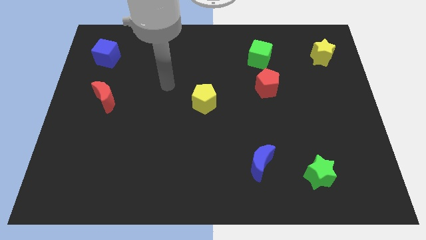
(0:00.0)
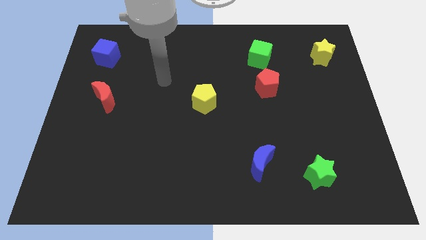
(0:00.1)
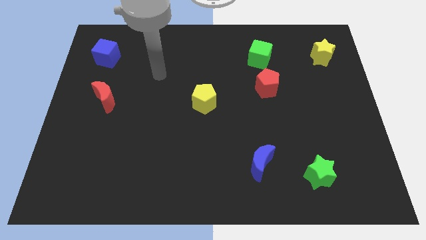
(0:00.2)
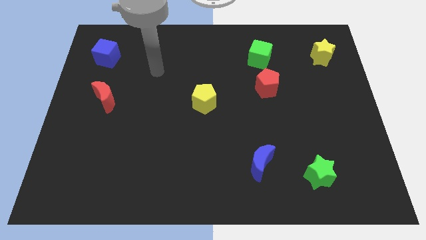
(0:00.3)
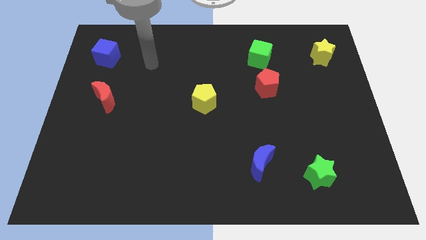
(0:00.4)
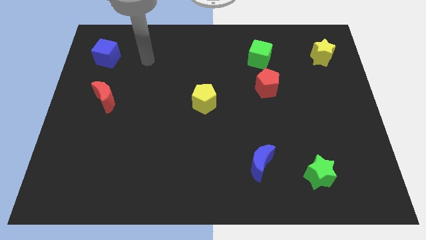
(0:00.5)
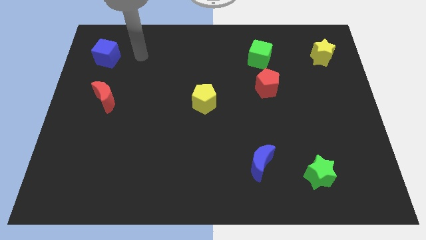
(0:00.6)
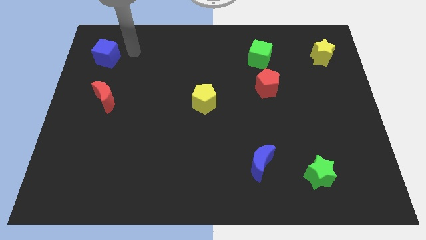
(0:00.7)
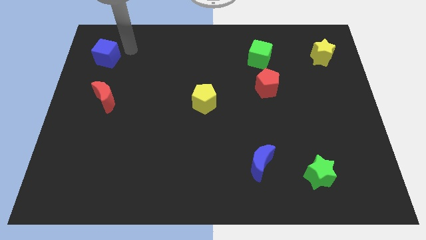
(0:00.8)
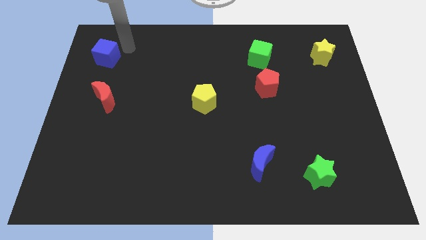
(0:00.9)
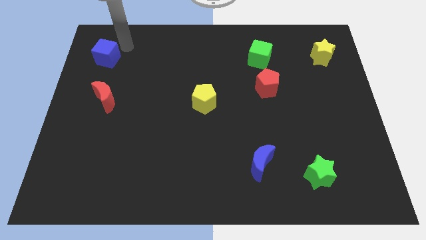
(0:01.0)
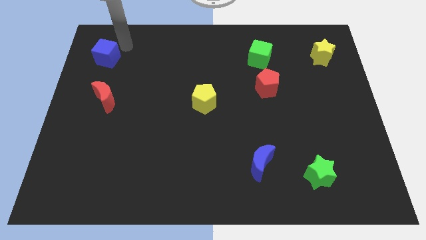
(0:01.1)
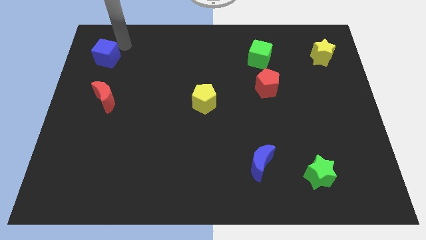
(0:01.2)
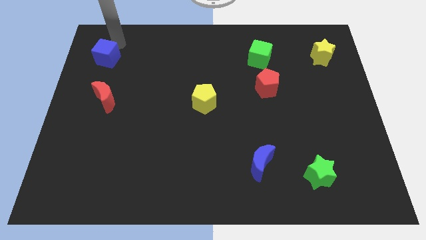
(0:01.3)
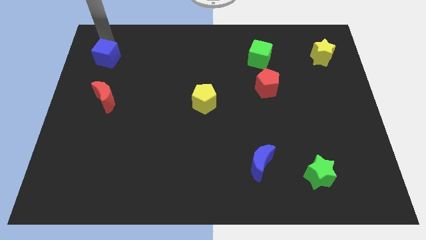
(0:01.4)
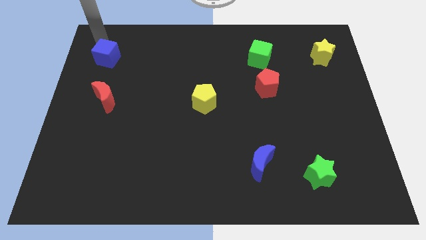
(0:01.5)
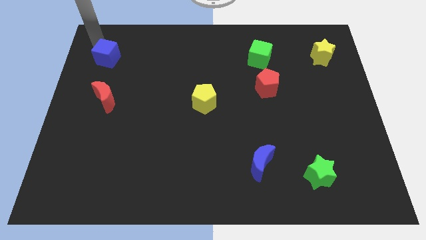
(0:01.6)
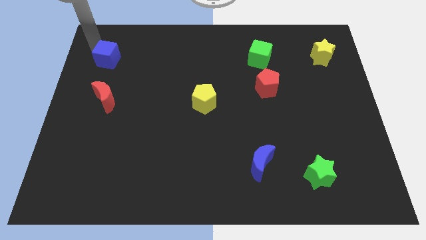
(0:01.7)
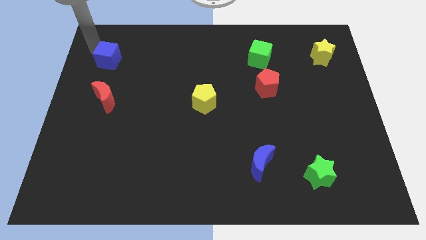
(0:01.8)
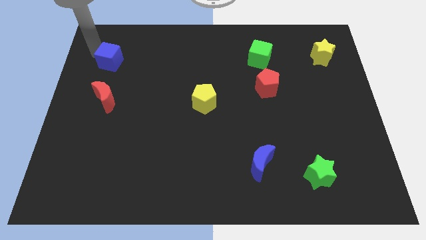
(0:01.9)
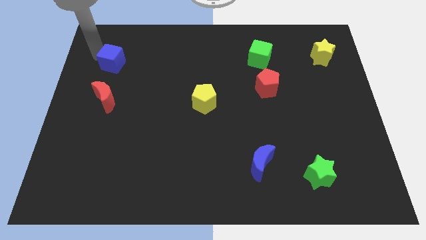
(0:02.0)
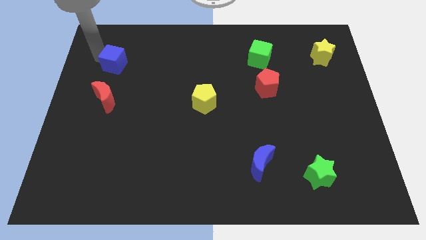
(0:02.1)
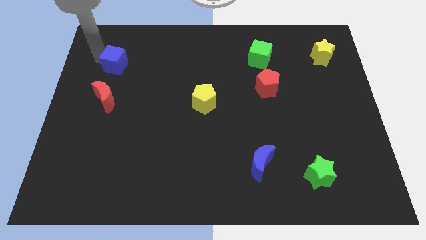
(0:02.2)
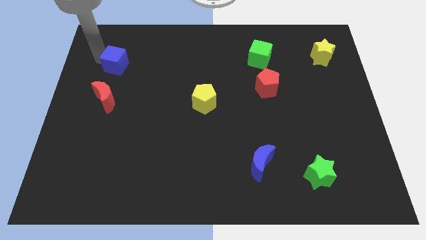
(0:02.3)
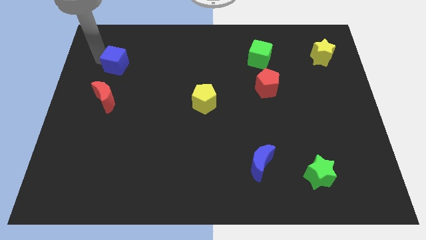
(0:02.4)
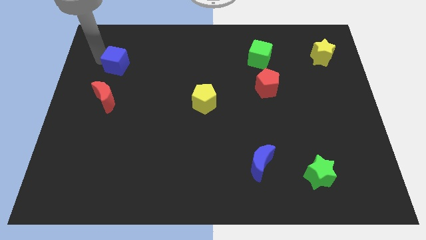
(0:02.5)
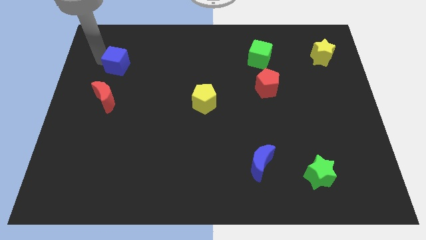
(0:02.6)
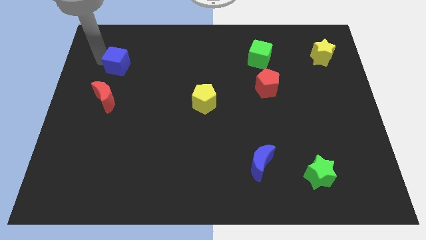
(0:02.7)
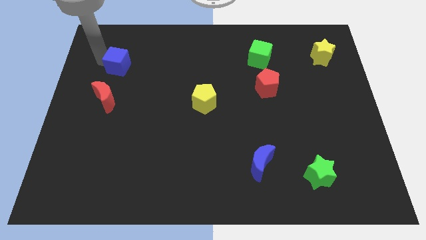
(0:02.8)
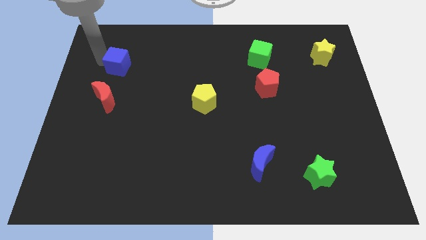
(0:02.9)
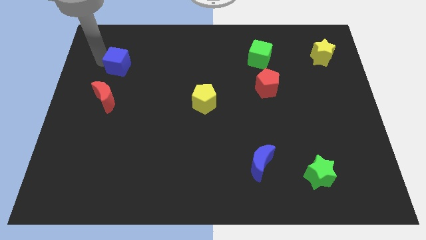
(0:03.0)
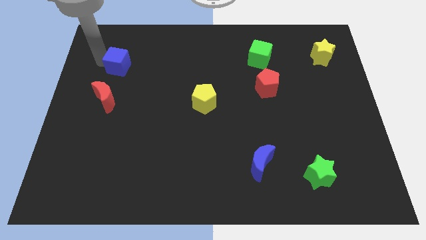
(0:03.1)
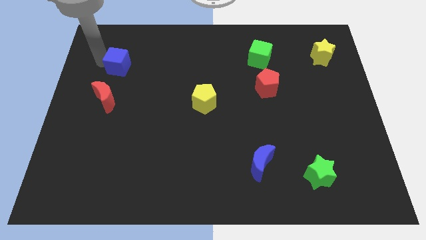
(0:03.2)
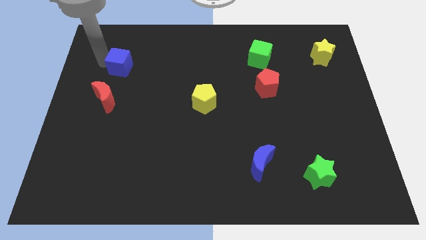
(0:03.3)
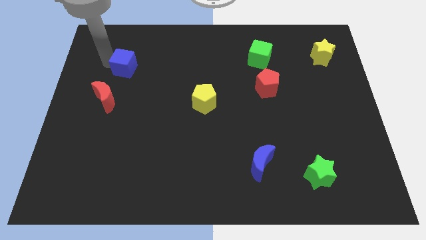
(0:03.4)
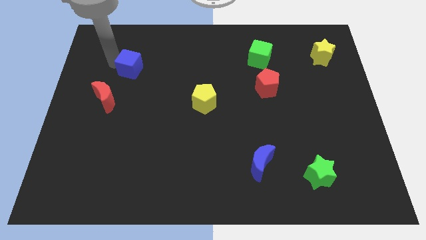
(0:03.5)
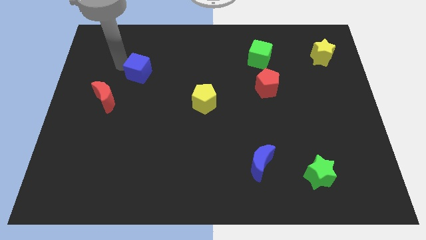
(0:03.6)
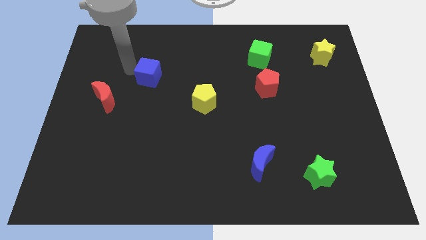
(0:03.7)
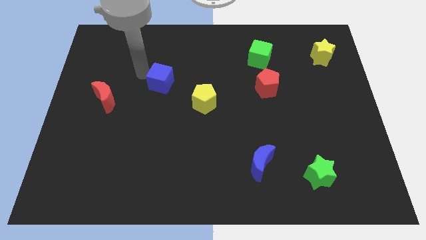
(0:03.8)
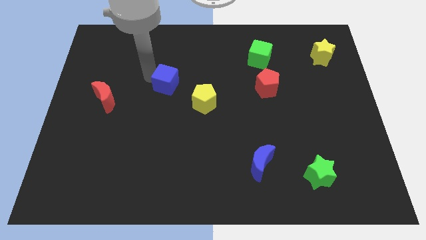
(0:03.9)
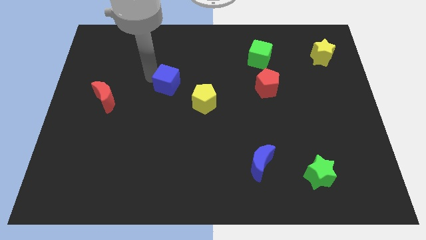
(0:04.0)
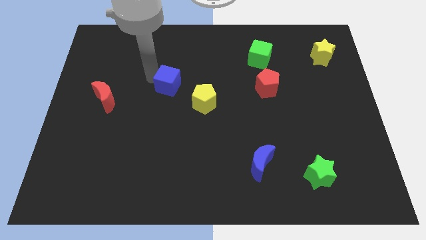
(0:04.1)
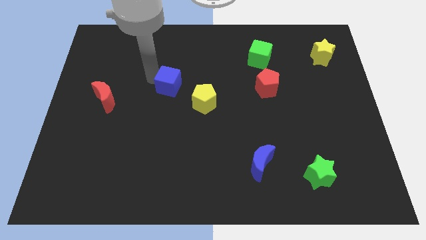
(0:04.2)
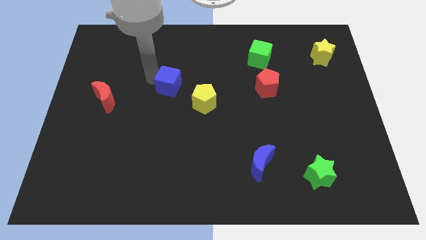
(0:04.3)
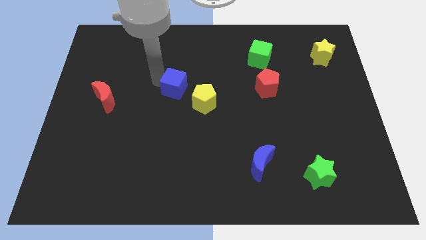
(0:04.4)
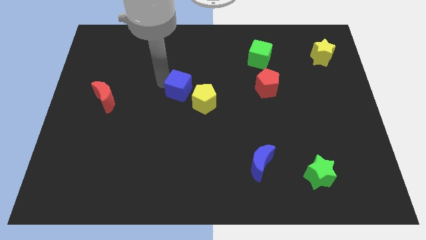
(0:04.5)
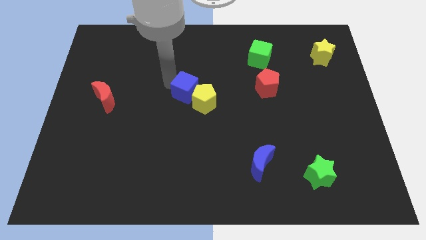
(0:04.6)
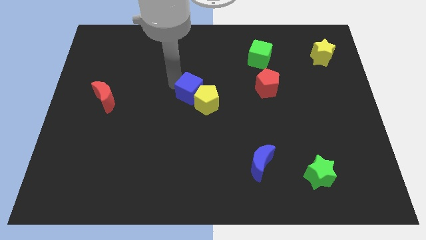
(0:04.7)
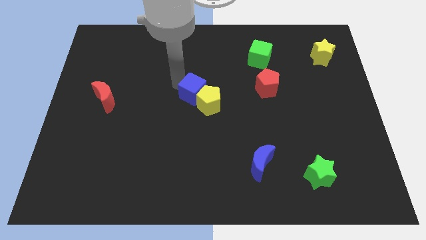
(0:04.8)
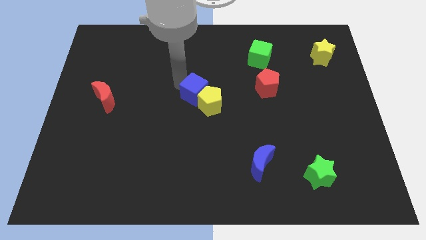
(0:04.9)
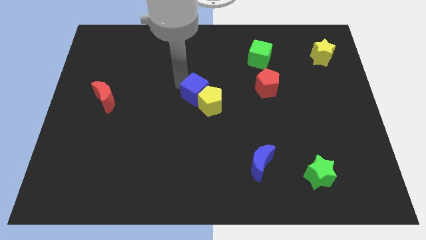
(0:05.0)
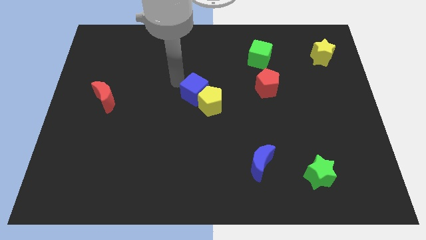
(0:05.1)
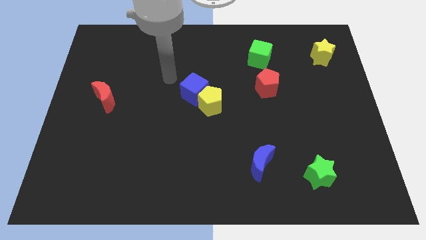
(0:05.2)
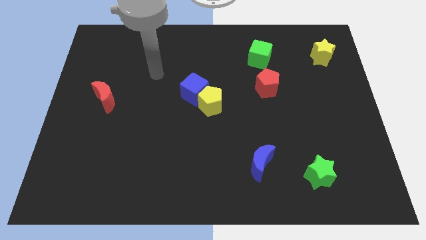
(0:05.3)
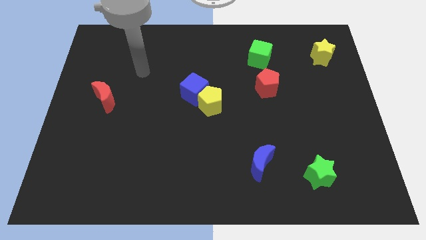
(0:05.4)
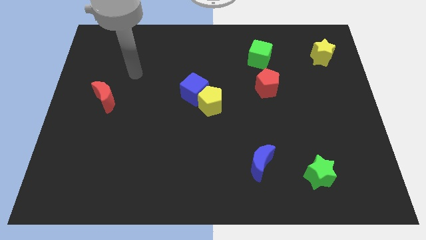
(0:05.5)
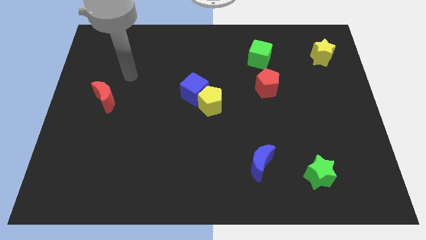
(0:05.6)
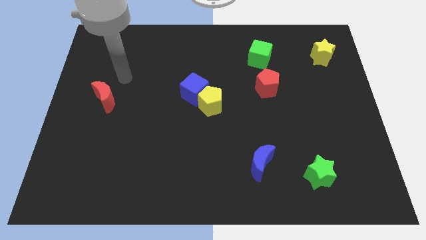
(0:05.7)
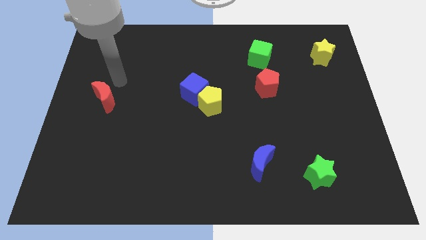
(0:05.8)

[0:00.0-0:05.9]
place the blue cube into the yellow pentagon

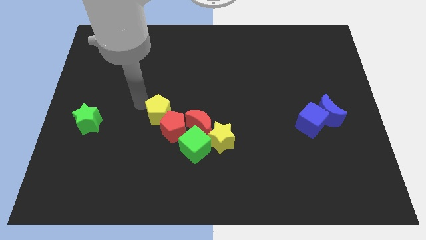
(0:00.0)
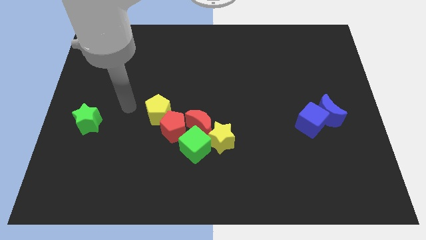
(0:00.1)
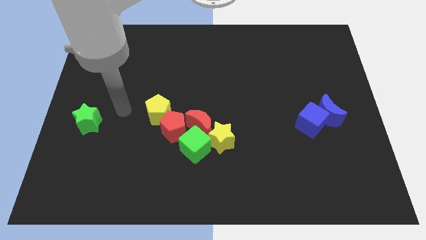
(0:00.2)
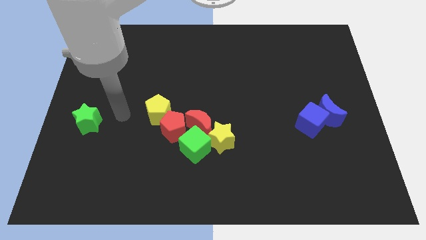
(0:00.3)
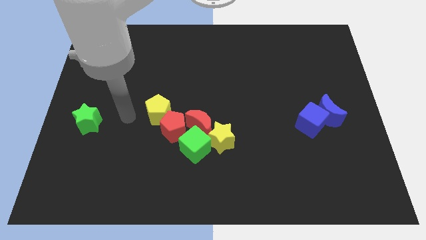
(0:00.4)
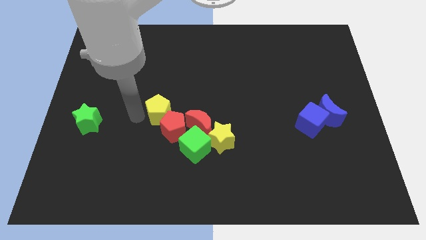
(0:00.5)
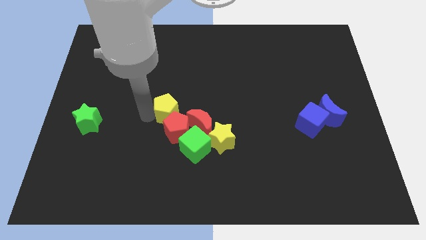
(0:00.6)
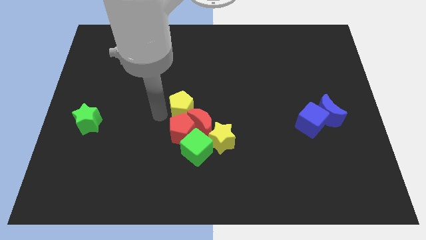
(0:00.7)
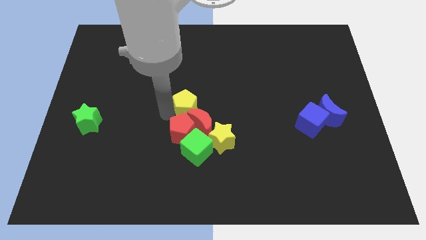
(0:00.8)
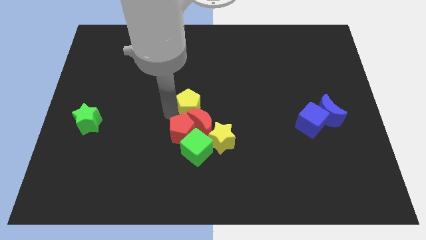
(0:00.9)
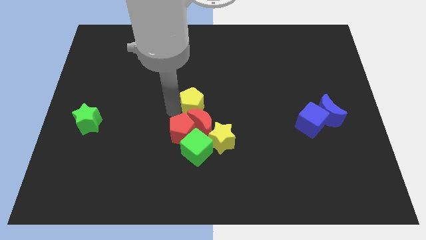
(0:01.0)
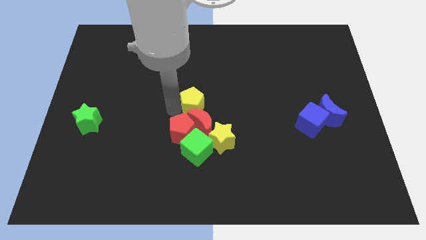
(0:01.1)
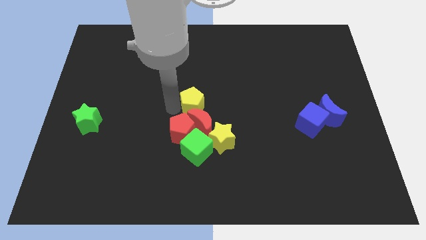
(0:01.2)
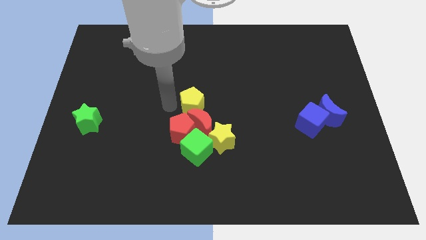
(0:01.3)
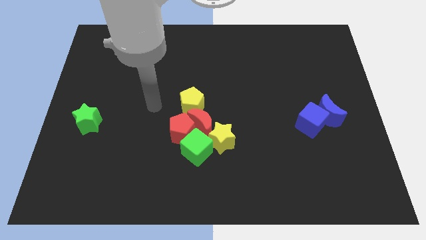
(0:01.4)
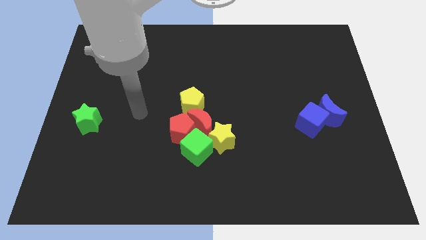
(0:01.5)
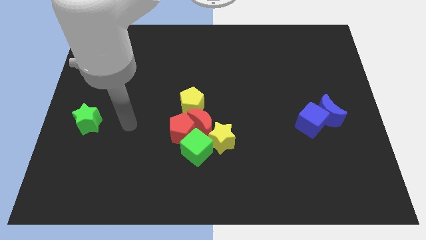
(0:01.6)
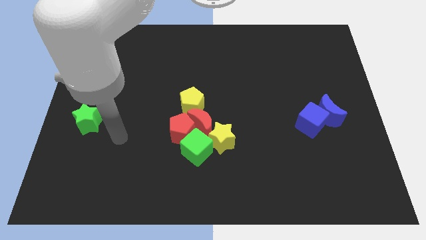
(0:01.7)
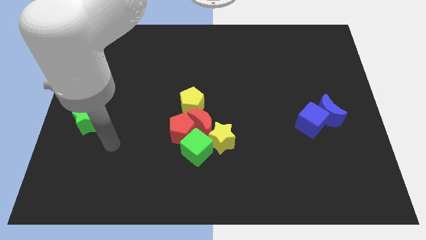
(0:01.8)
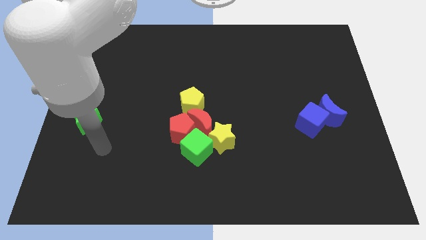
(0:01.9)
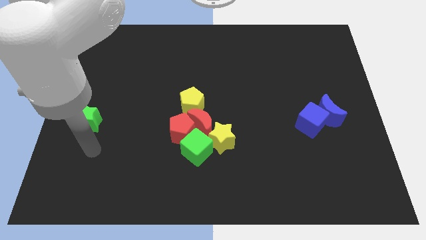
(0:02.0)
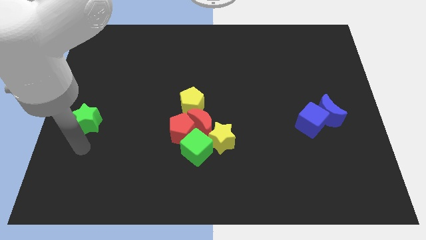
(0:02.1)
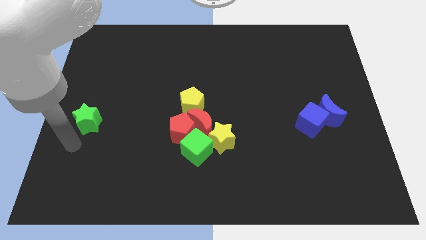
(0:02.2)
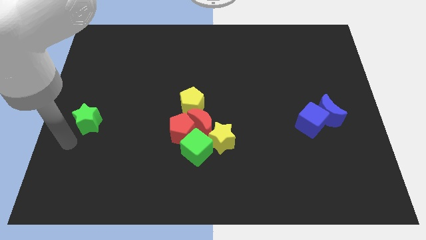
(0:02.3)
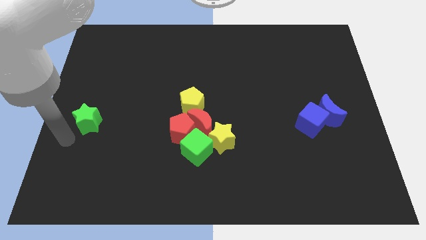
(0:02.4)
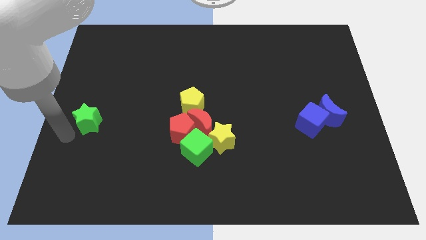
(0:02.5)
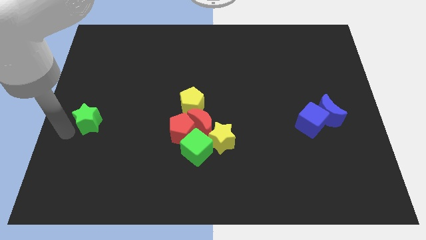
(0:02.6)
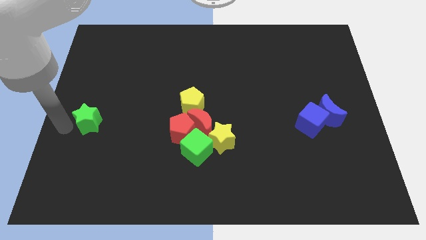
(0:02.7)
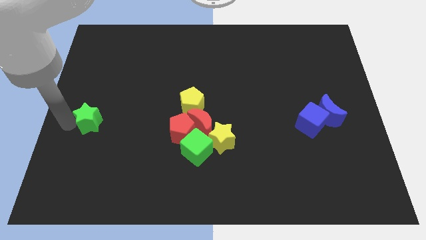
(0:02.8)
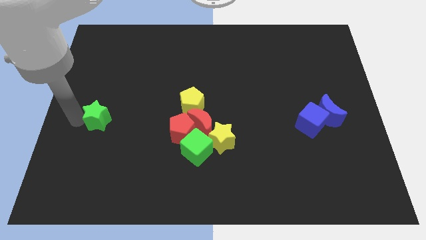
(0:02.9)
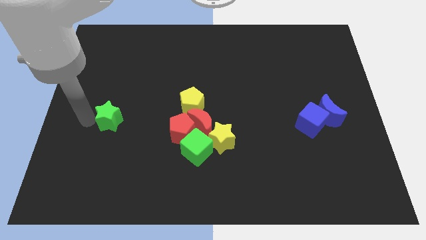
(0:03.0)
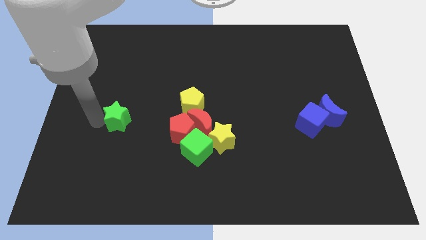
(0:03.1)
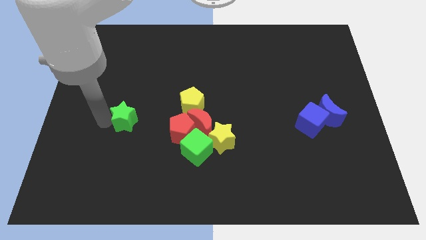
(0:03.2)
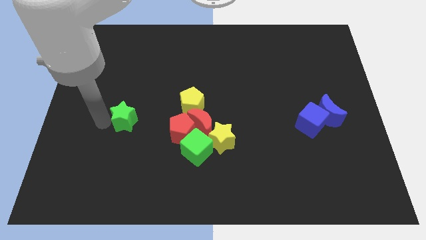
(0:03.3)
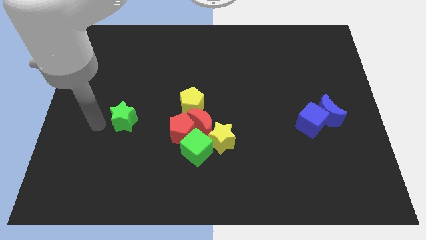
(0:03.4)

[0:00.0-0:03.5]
push the green star towards the yellow pentagon
